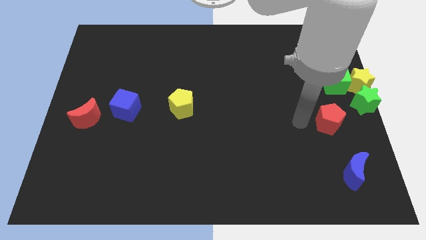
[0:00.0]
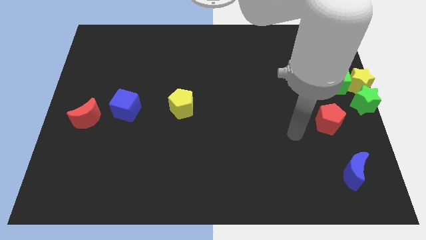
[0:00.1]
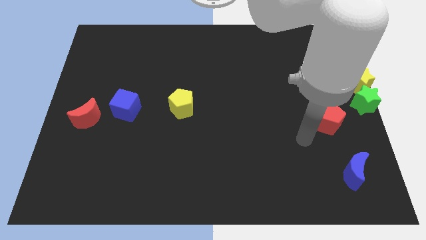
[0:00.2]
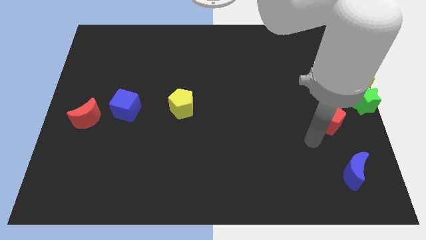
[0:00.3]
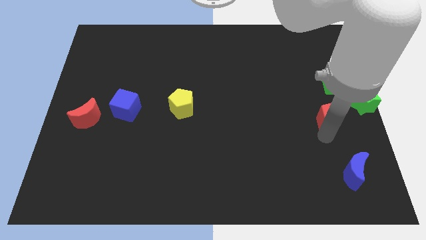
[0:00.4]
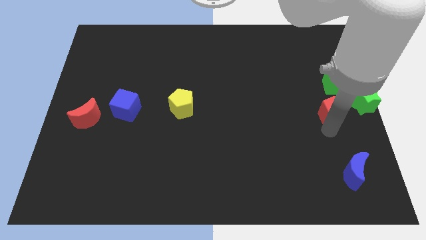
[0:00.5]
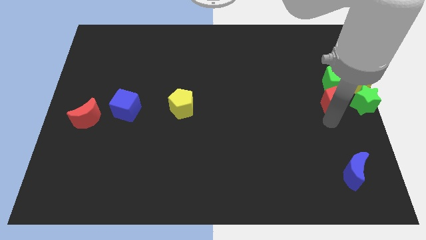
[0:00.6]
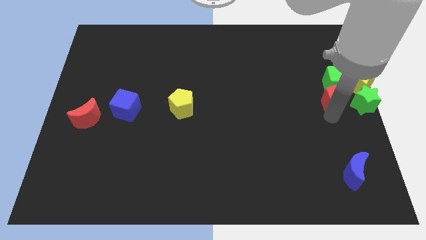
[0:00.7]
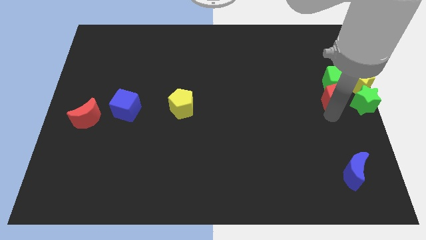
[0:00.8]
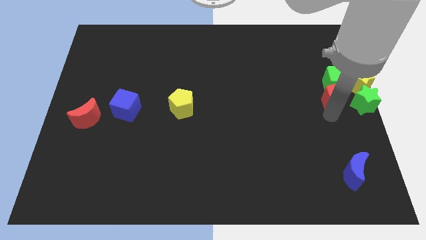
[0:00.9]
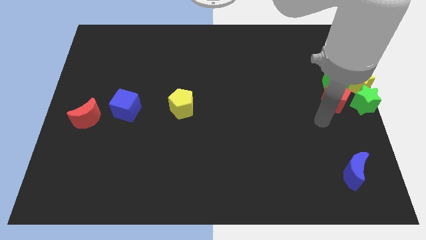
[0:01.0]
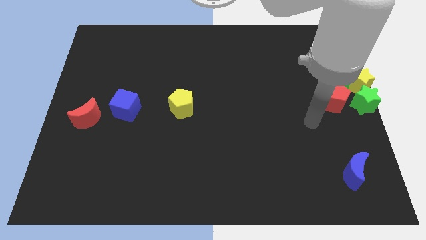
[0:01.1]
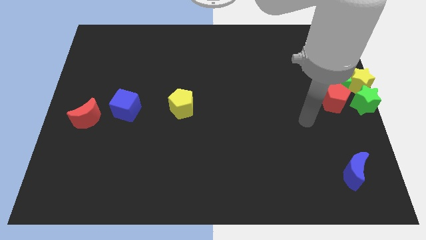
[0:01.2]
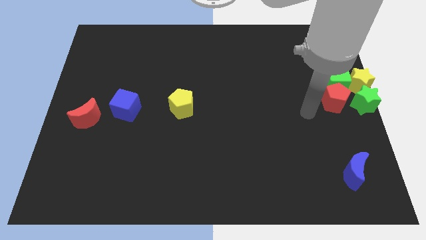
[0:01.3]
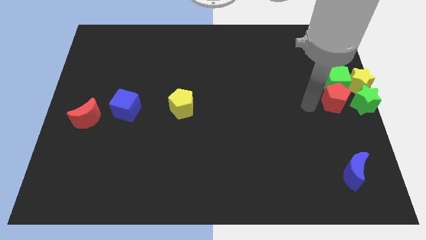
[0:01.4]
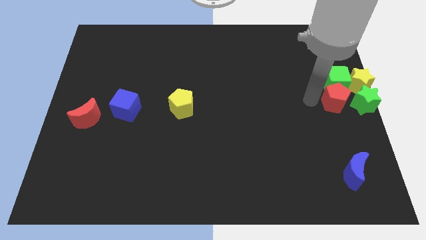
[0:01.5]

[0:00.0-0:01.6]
push the red pentagon to the left of the green star

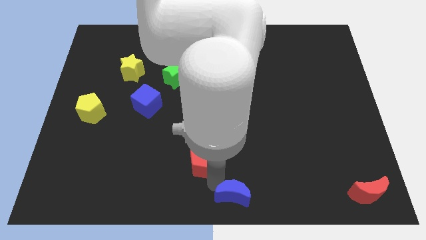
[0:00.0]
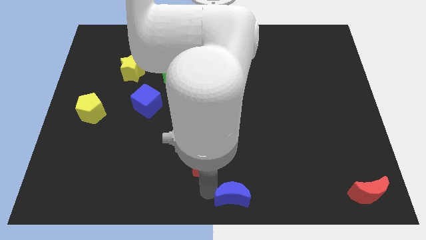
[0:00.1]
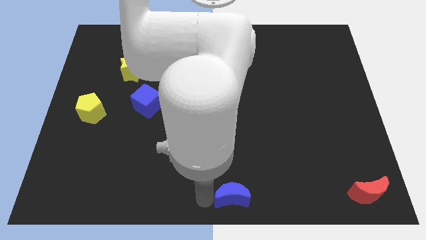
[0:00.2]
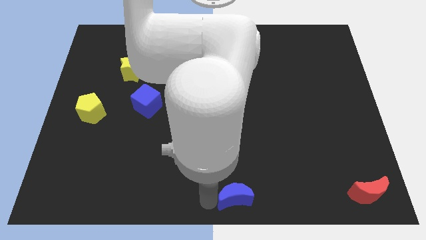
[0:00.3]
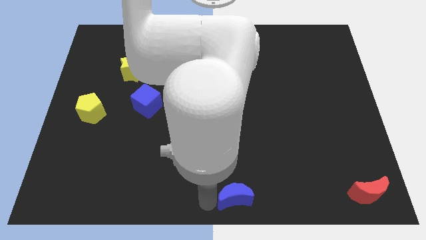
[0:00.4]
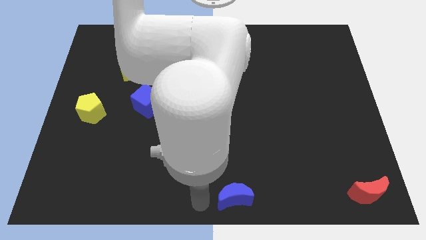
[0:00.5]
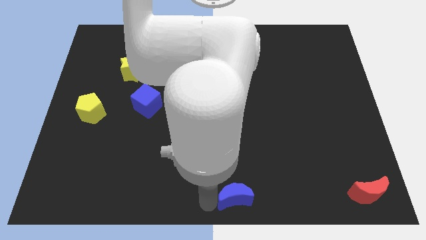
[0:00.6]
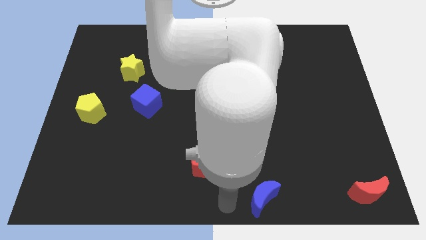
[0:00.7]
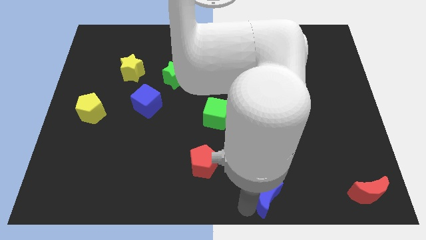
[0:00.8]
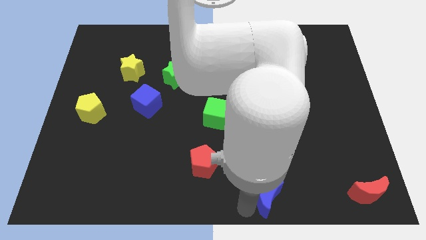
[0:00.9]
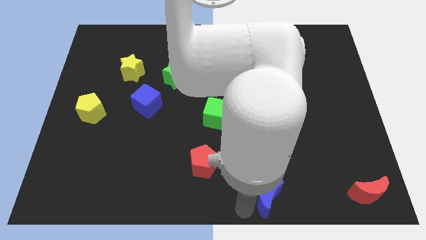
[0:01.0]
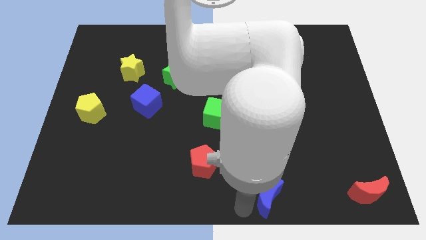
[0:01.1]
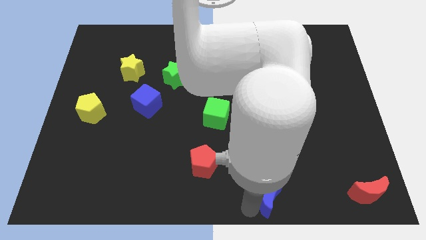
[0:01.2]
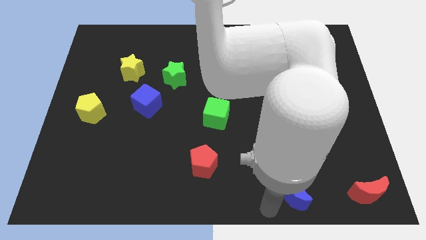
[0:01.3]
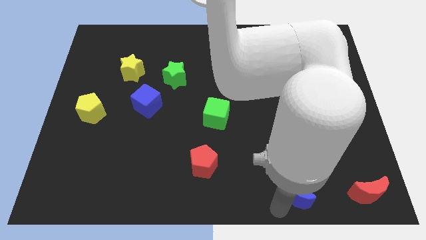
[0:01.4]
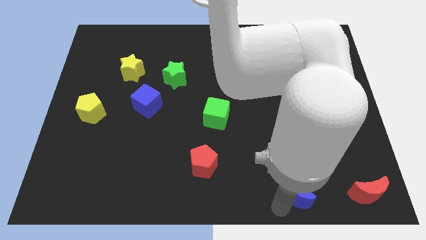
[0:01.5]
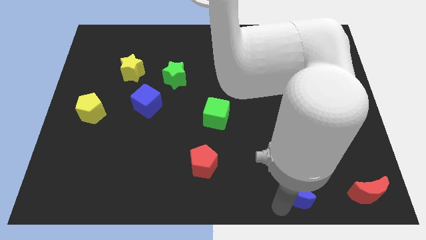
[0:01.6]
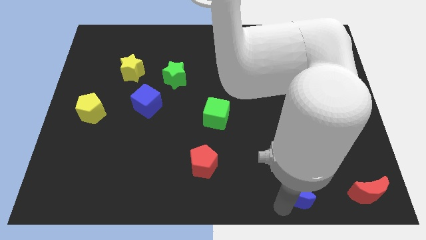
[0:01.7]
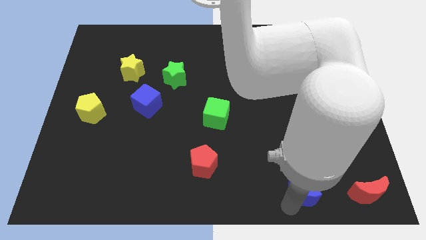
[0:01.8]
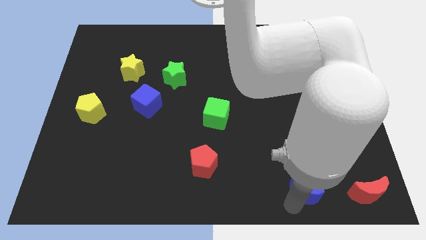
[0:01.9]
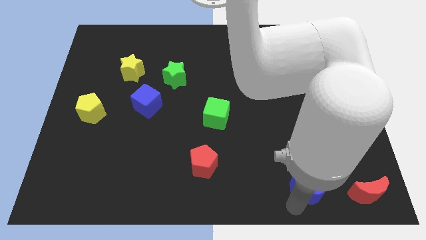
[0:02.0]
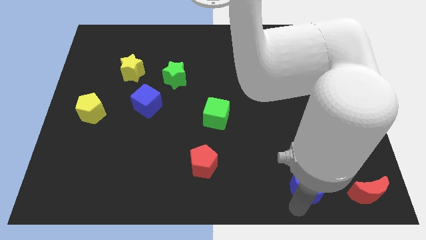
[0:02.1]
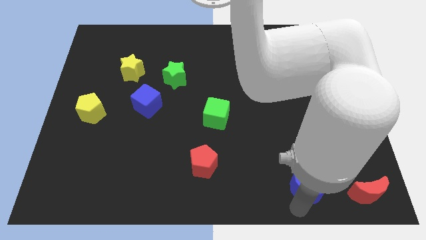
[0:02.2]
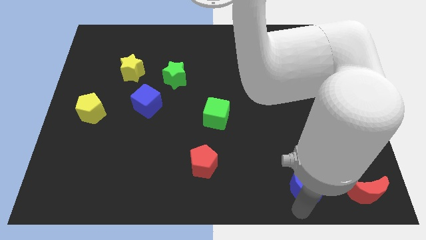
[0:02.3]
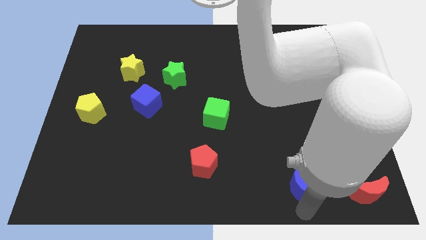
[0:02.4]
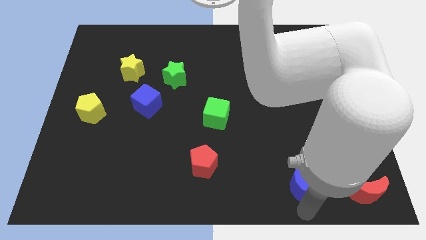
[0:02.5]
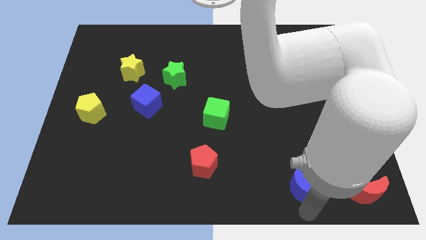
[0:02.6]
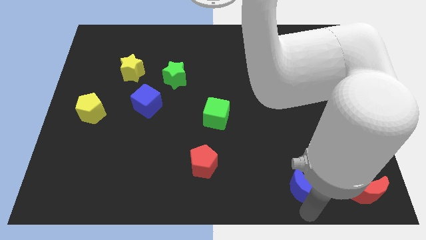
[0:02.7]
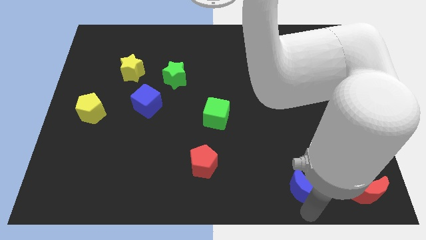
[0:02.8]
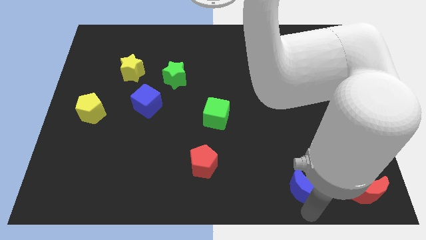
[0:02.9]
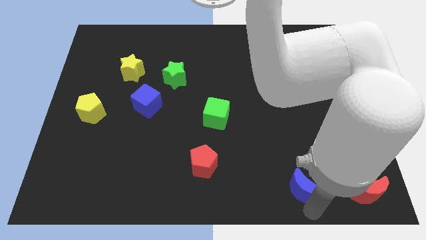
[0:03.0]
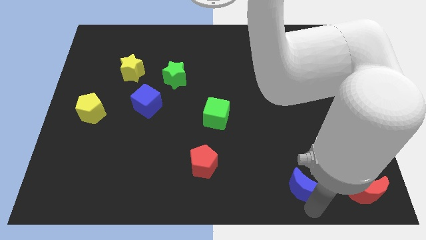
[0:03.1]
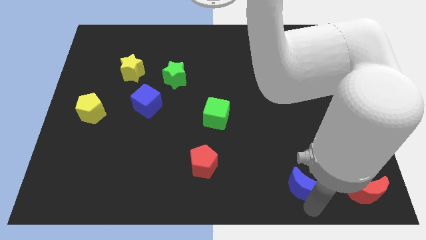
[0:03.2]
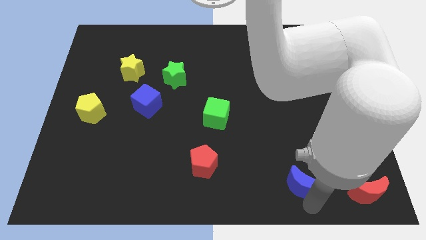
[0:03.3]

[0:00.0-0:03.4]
place the blue crescent parallel to red crescent

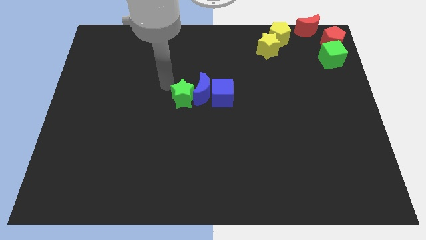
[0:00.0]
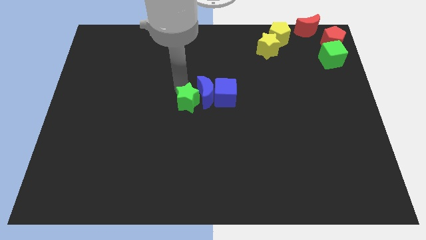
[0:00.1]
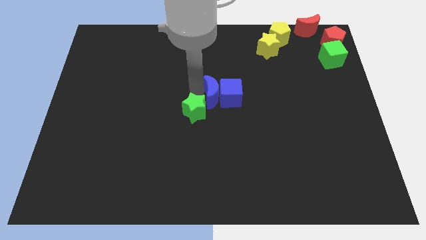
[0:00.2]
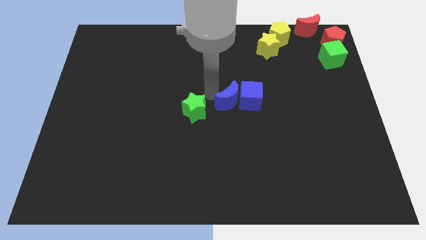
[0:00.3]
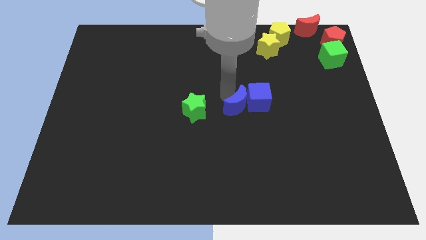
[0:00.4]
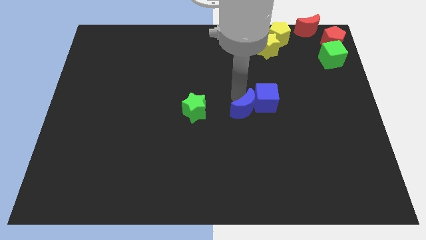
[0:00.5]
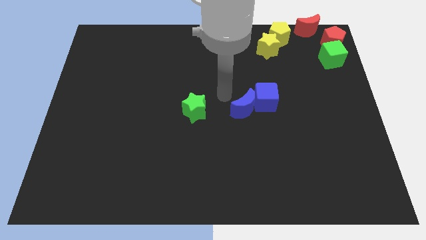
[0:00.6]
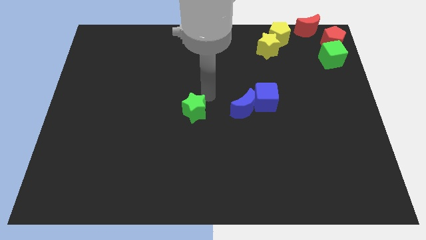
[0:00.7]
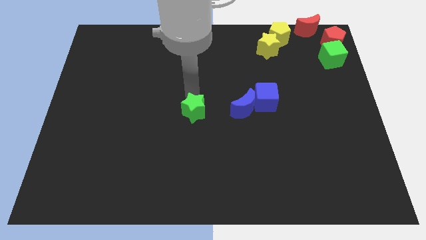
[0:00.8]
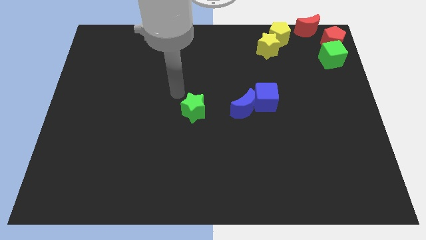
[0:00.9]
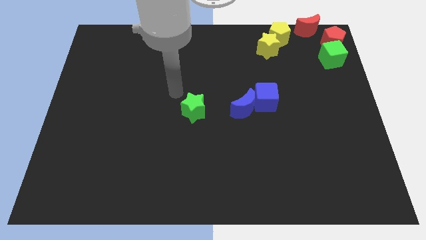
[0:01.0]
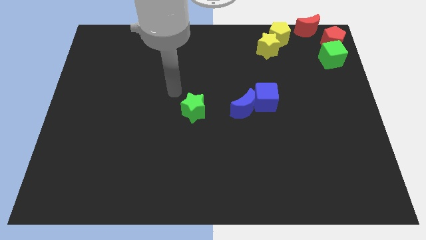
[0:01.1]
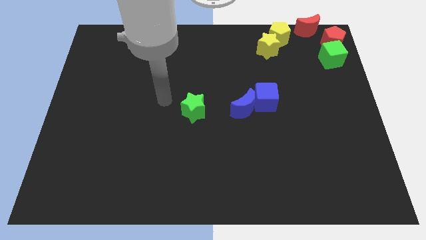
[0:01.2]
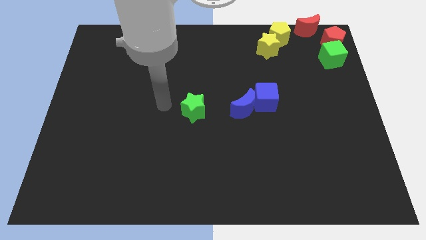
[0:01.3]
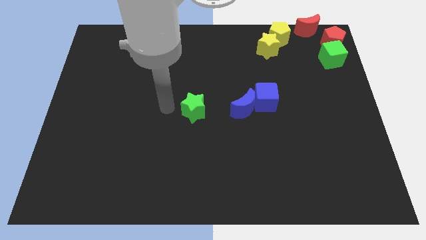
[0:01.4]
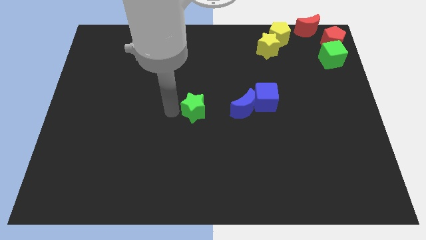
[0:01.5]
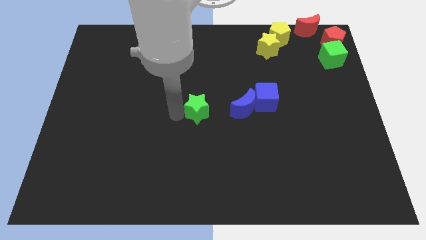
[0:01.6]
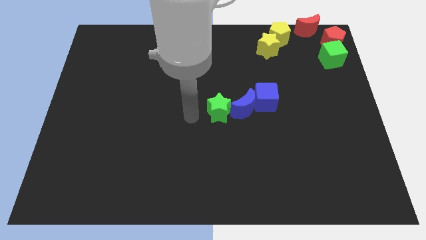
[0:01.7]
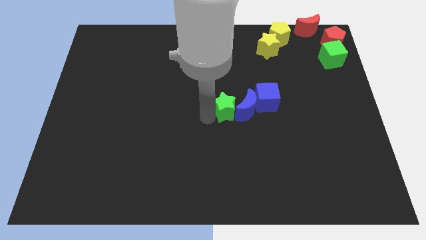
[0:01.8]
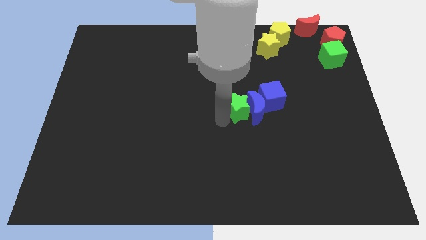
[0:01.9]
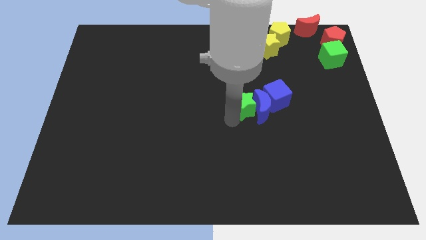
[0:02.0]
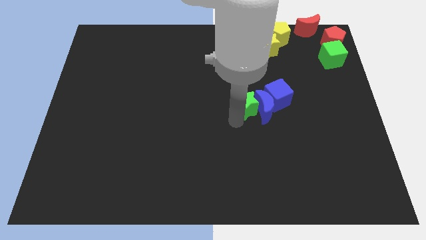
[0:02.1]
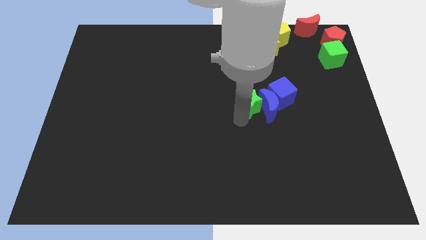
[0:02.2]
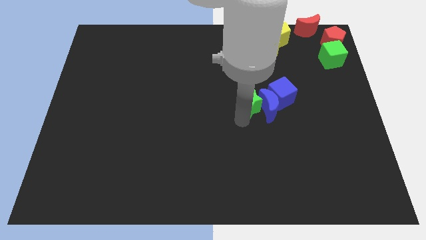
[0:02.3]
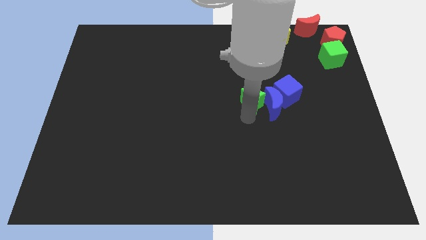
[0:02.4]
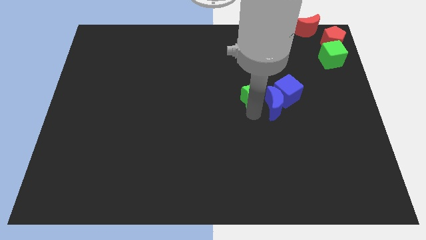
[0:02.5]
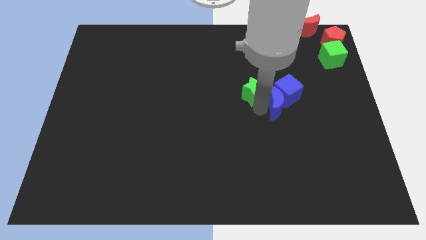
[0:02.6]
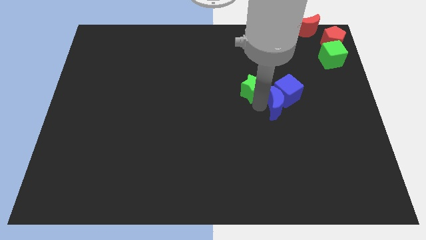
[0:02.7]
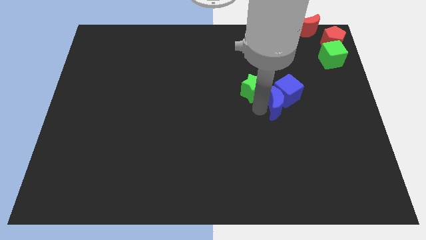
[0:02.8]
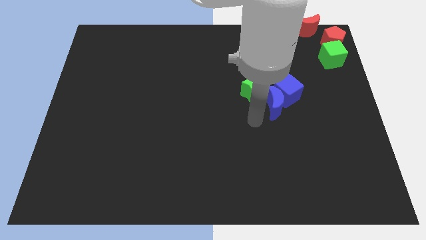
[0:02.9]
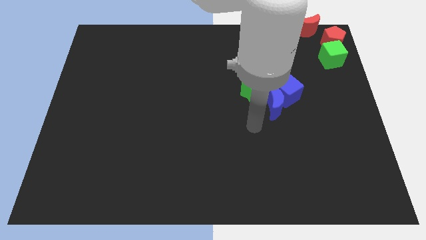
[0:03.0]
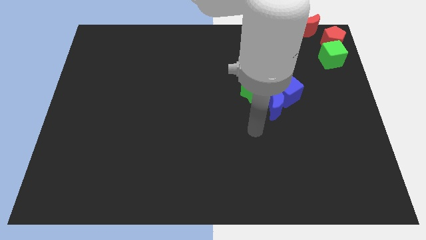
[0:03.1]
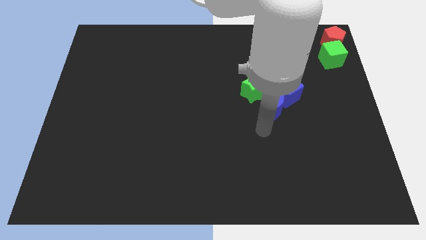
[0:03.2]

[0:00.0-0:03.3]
push the green star into the blue crescent

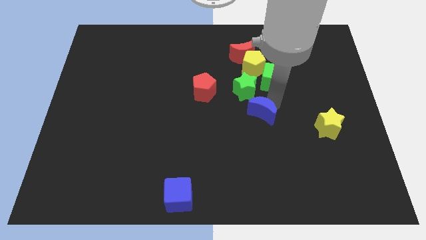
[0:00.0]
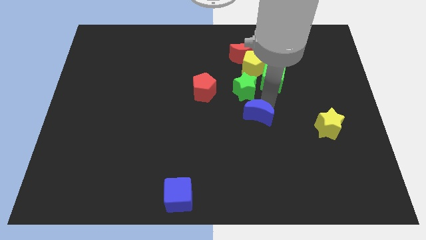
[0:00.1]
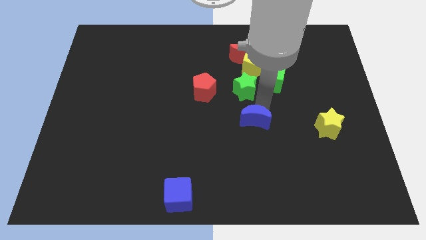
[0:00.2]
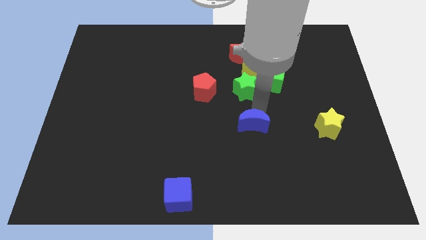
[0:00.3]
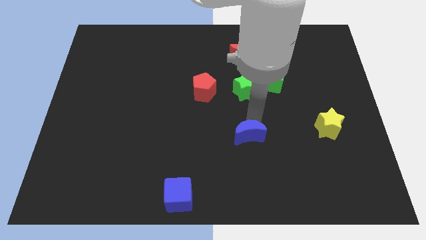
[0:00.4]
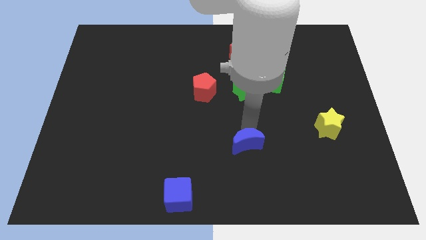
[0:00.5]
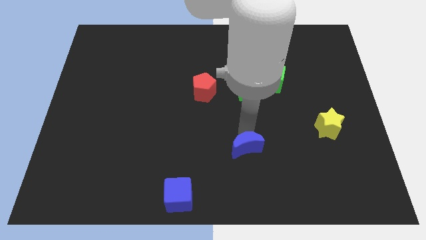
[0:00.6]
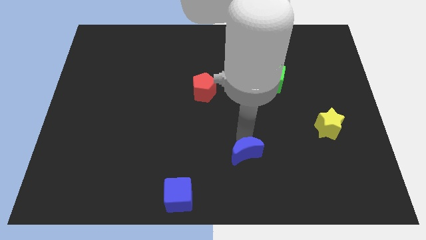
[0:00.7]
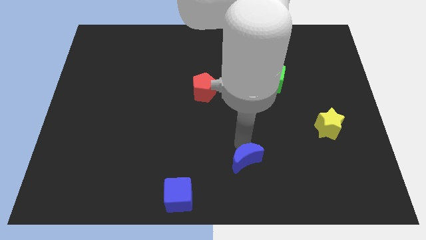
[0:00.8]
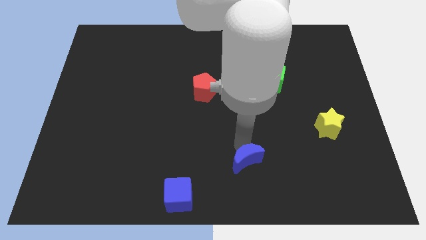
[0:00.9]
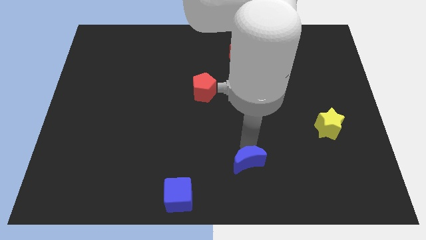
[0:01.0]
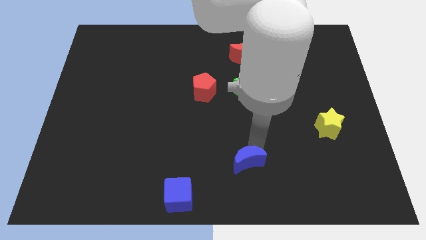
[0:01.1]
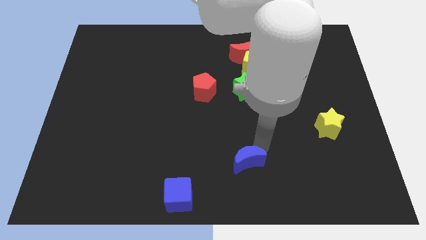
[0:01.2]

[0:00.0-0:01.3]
move blue moon towards blue cube
